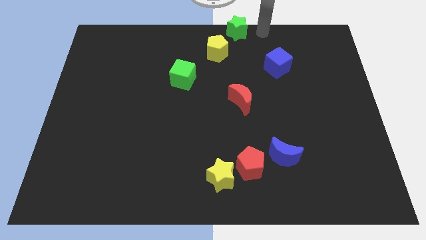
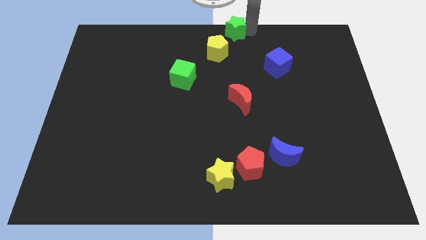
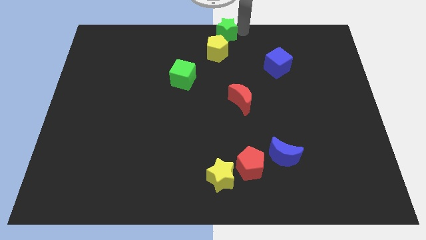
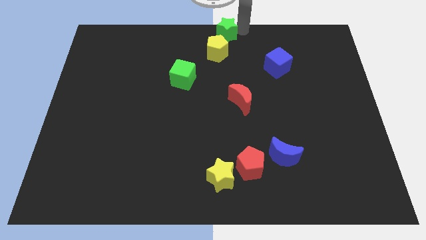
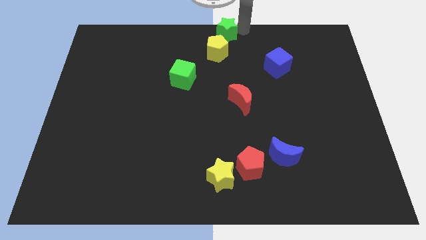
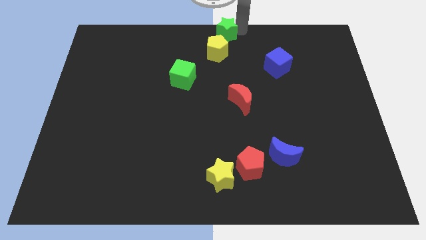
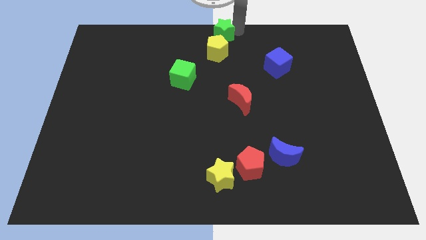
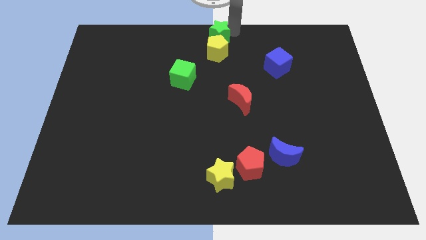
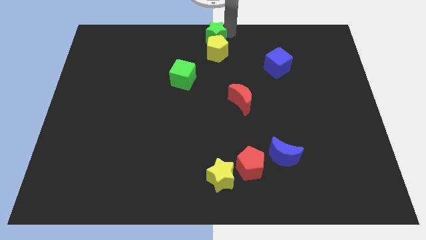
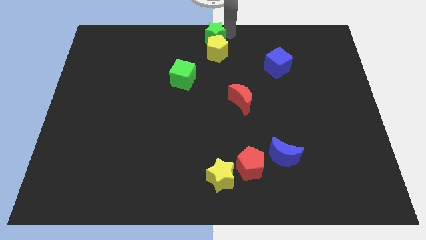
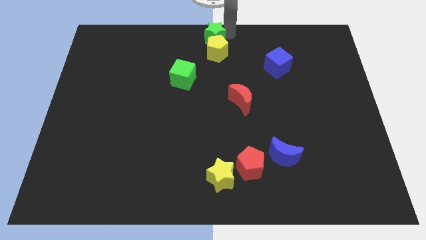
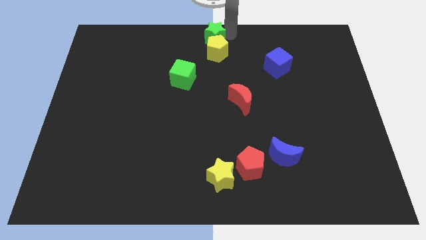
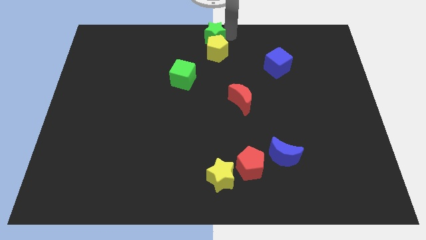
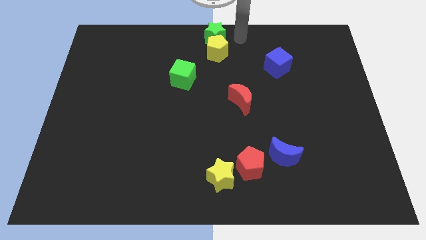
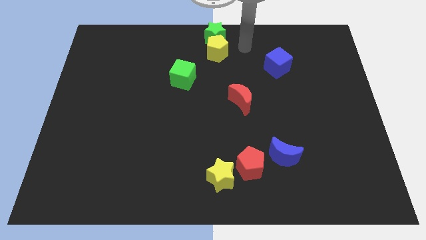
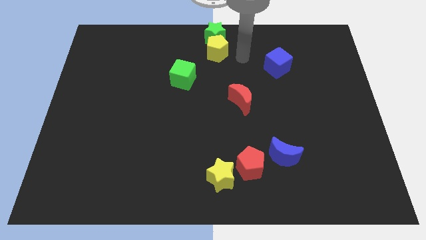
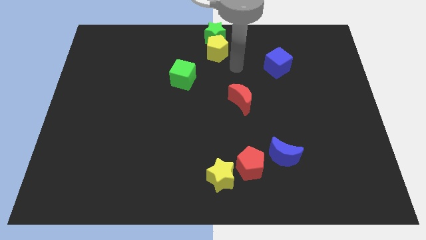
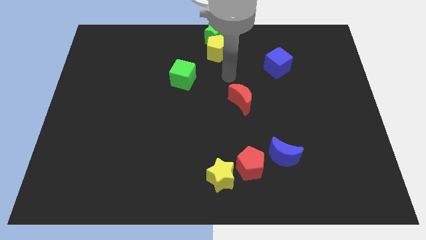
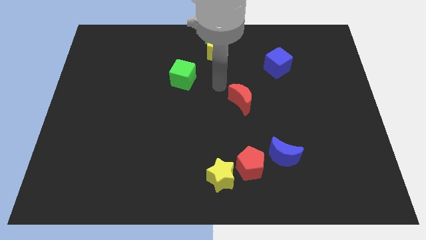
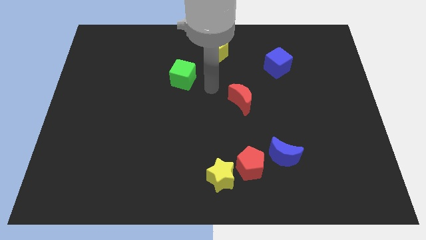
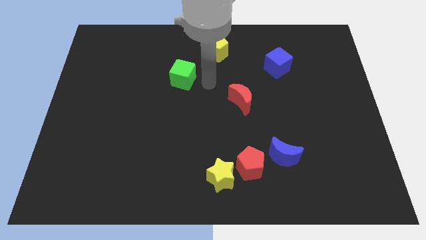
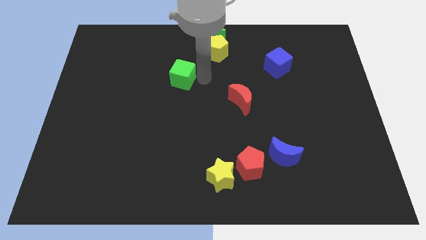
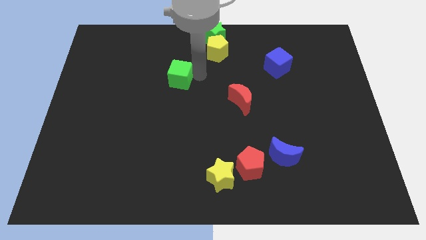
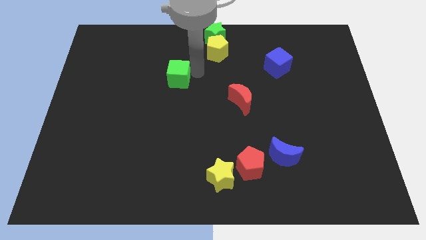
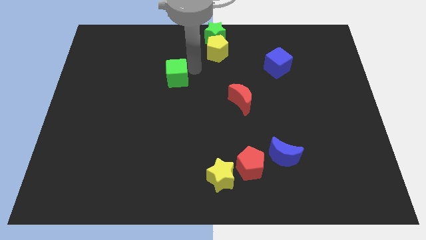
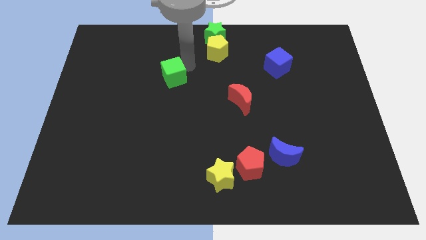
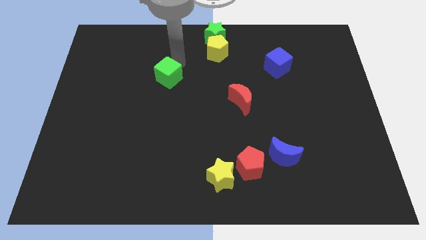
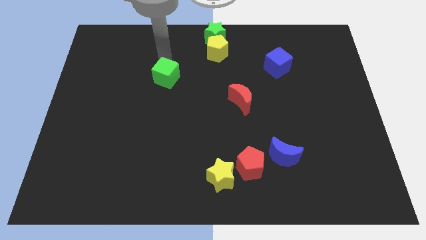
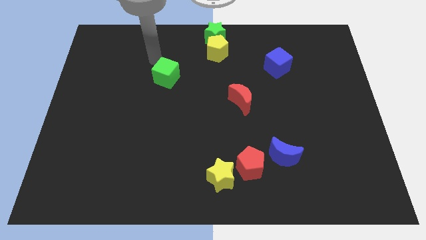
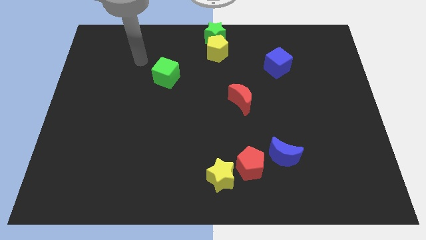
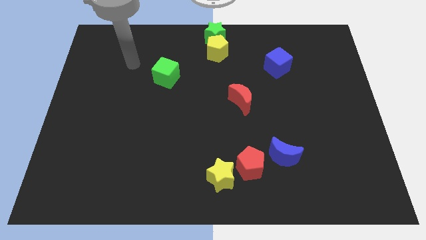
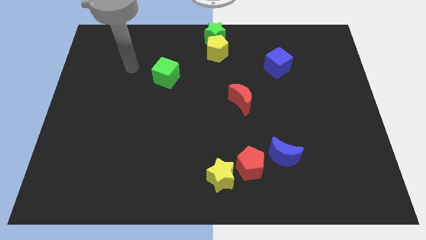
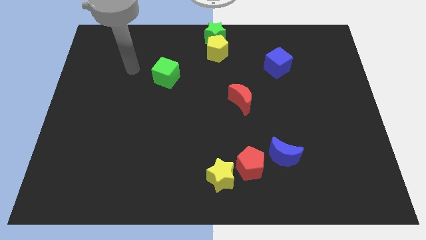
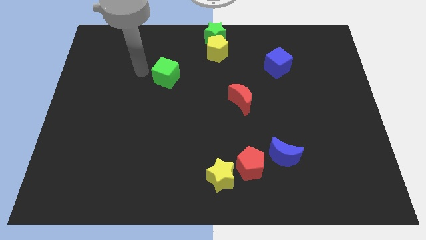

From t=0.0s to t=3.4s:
push your arm to the left side of the green cube

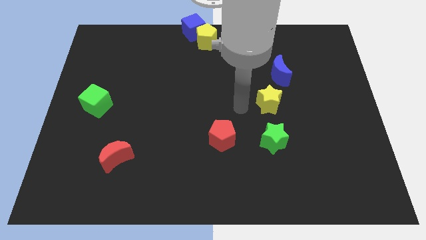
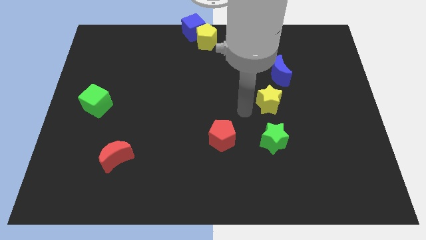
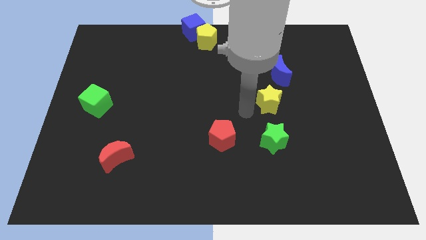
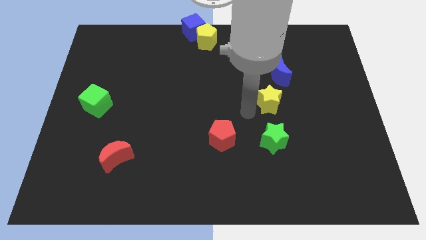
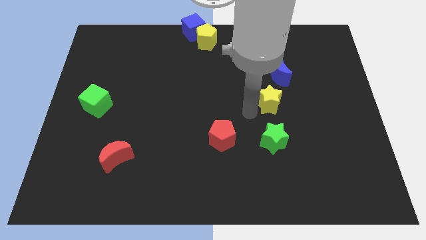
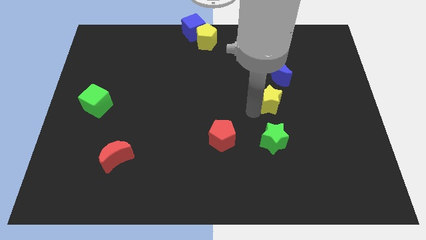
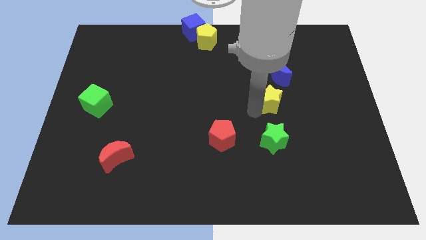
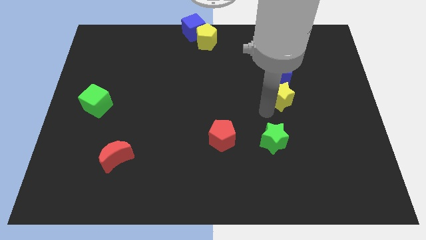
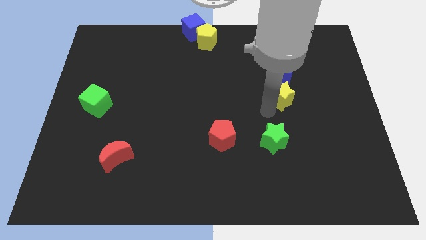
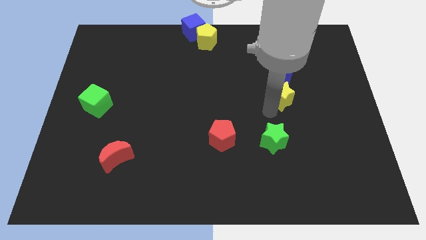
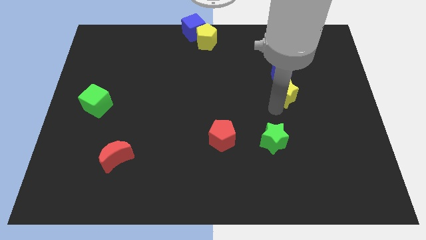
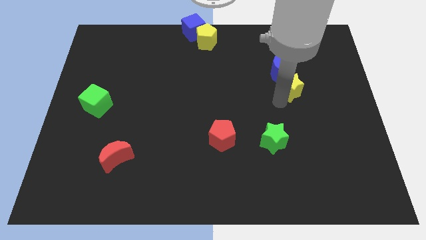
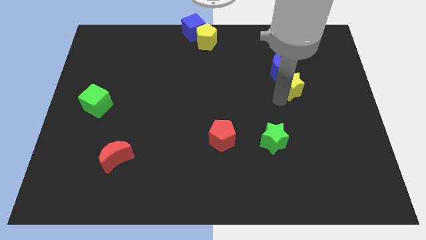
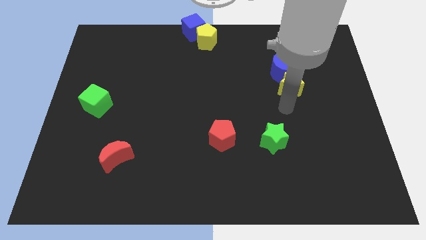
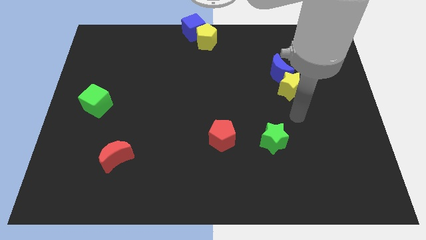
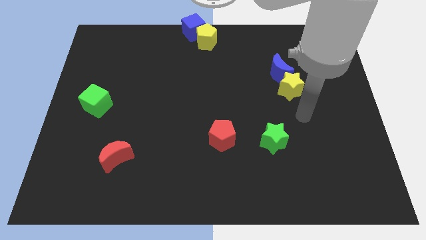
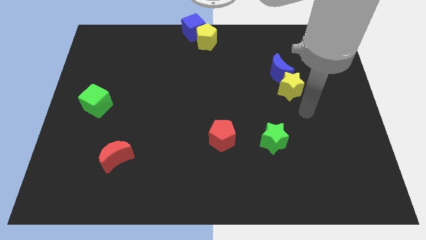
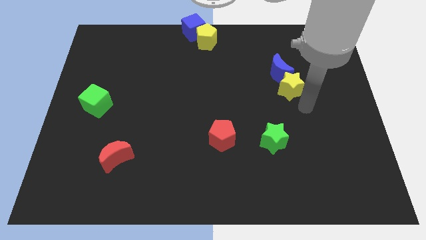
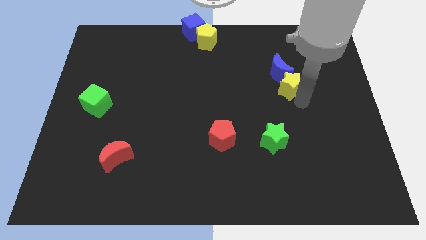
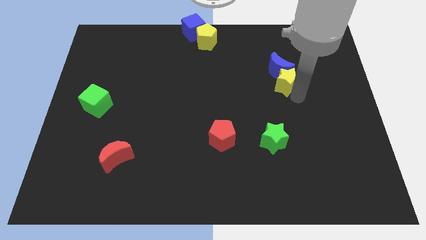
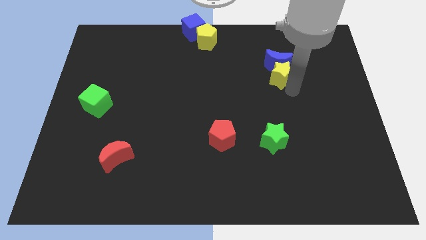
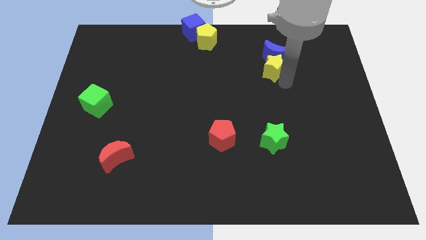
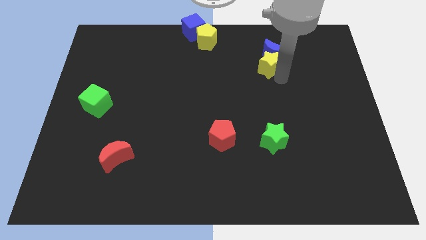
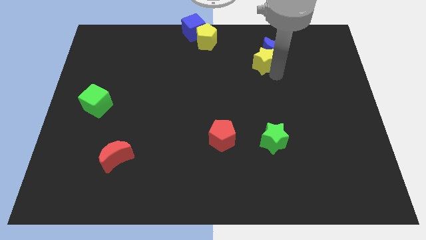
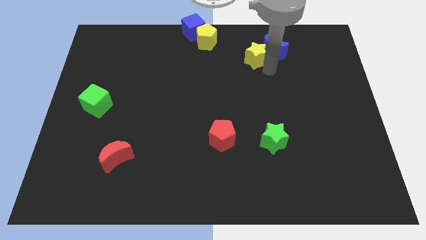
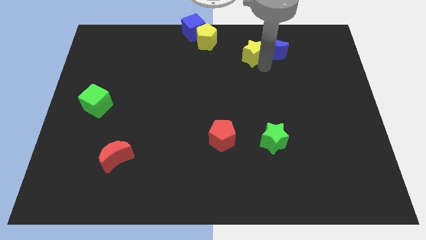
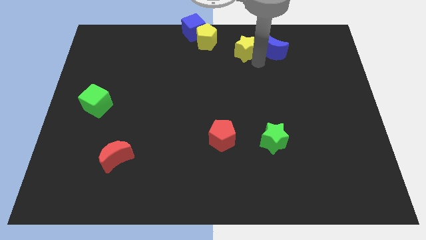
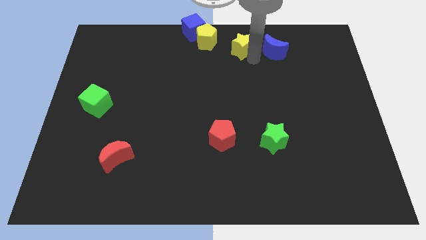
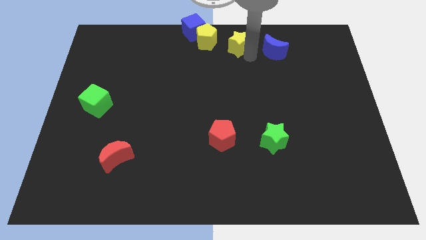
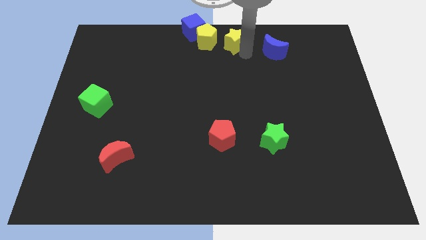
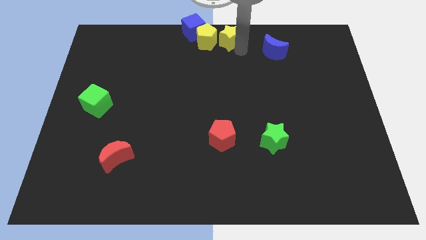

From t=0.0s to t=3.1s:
move yellow star along with blue crescent to the left of yelllow pentagon

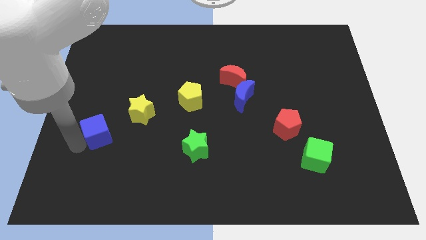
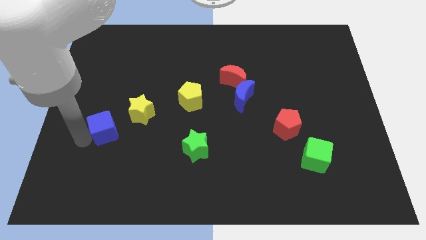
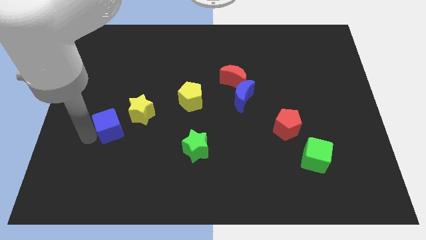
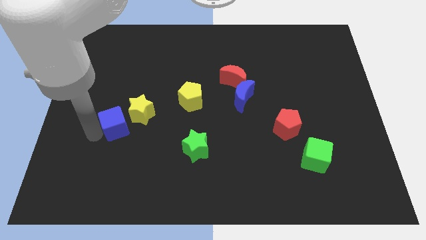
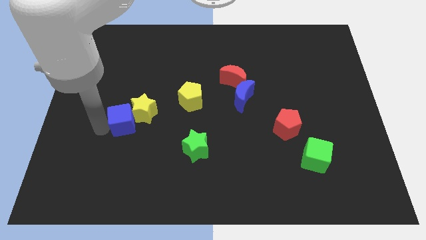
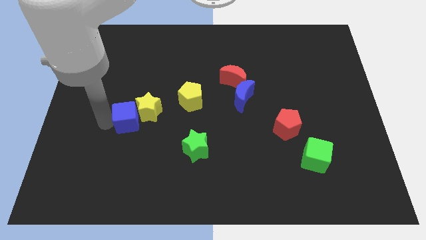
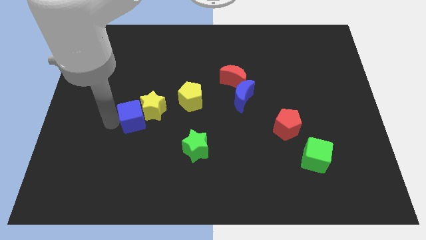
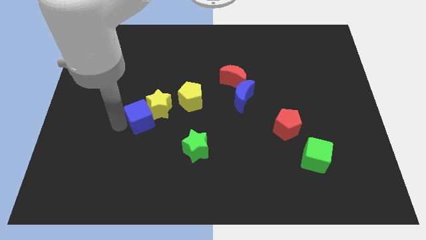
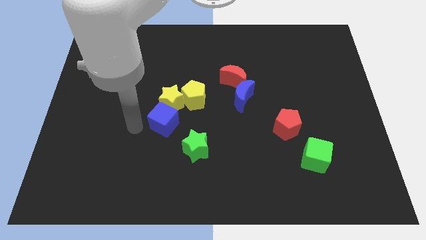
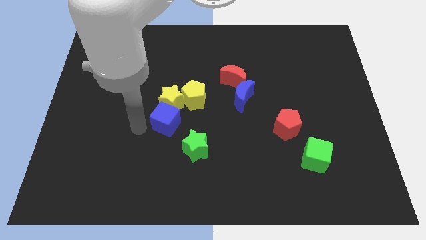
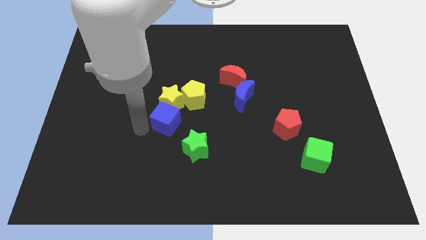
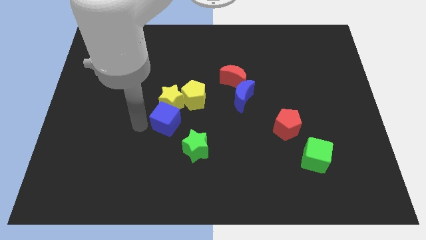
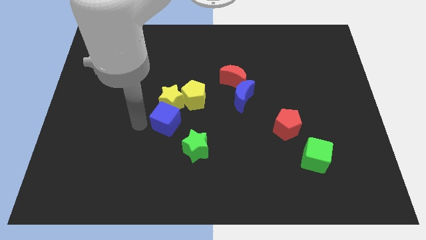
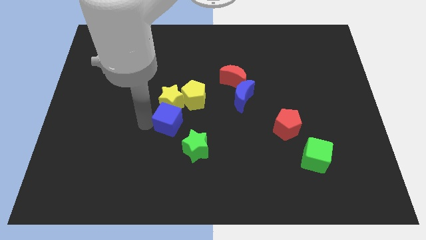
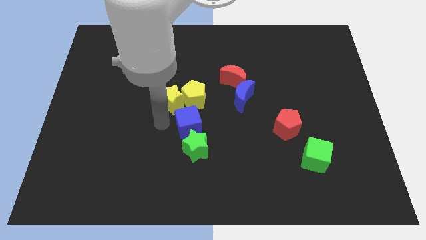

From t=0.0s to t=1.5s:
place the blue cube below the yellow blocks

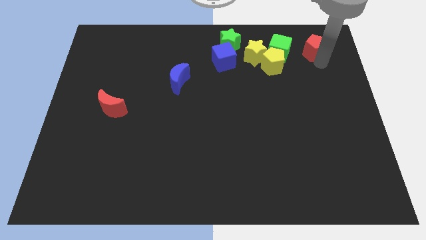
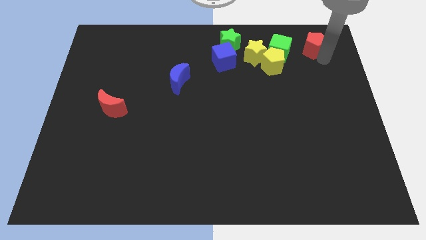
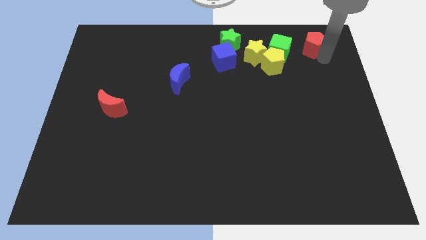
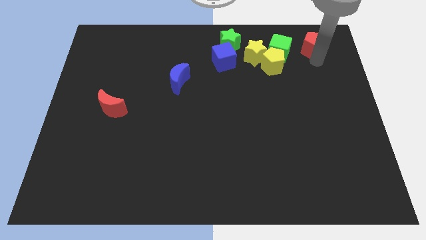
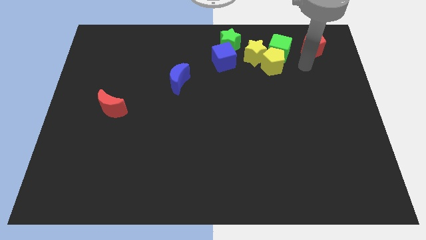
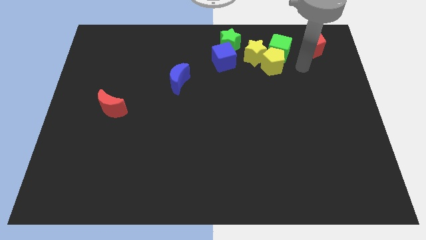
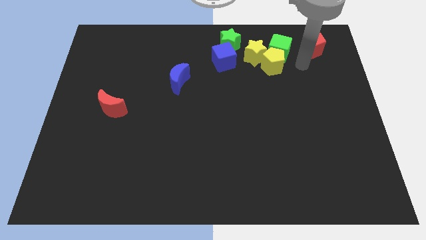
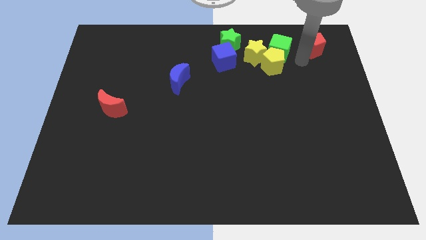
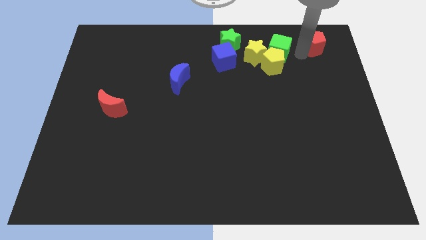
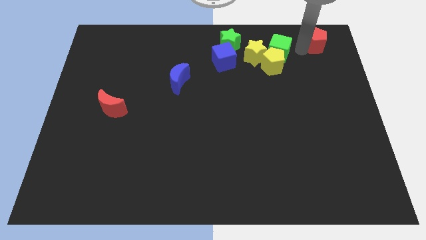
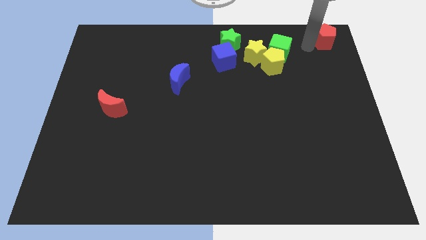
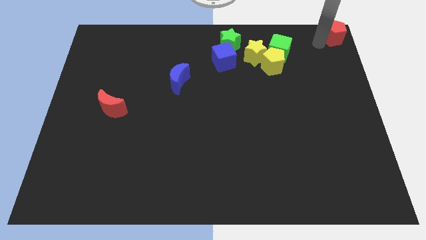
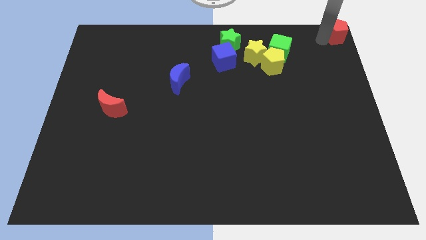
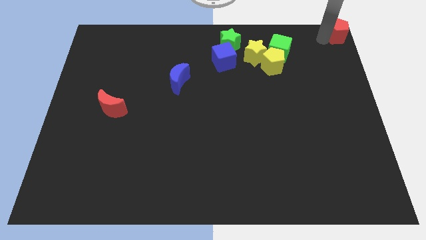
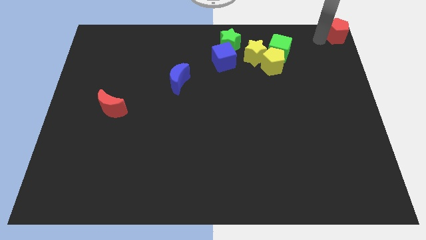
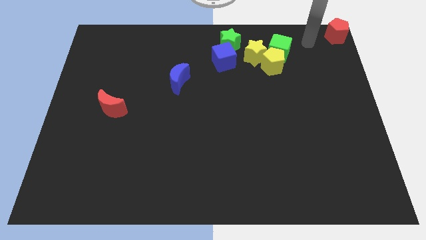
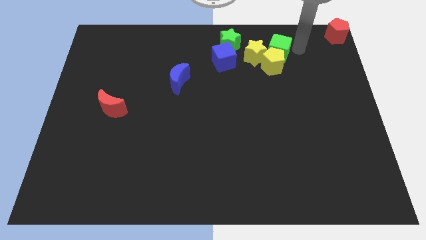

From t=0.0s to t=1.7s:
push red pentagon to the top right
